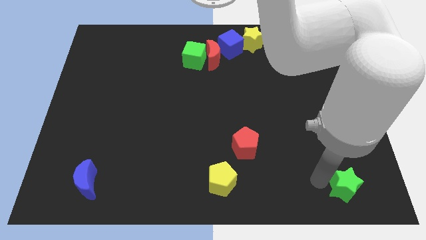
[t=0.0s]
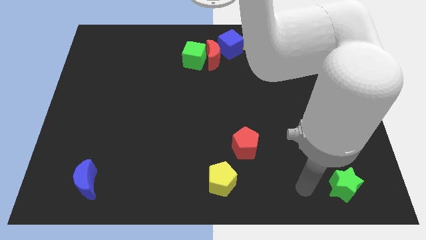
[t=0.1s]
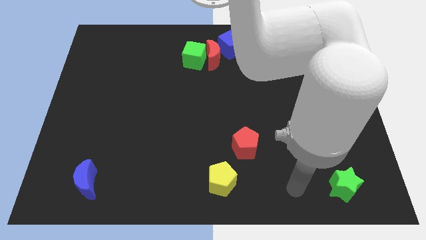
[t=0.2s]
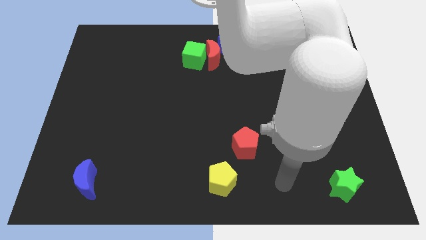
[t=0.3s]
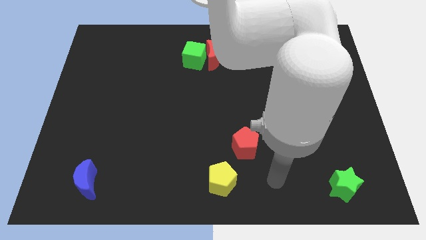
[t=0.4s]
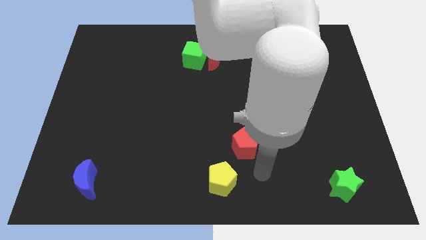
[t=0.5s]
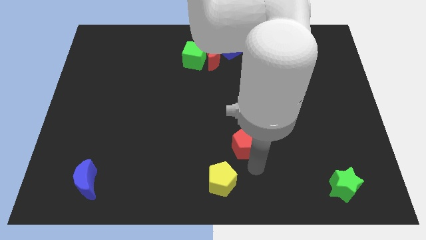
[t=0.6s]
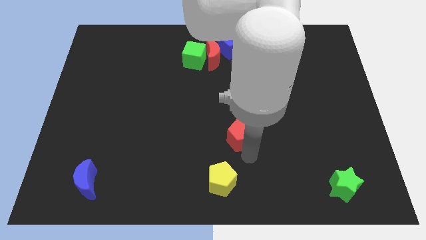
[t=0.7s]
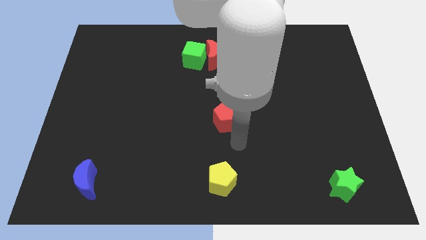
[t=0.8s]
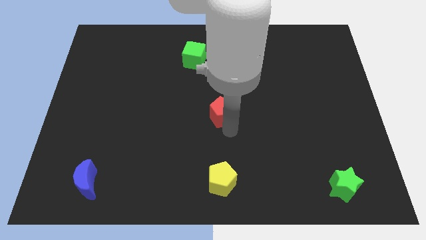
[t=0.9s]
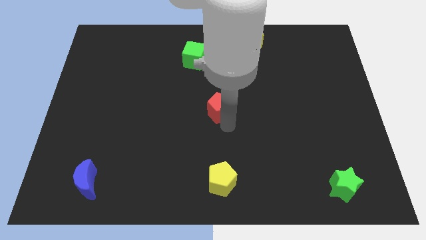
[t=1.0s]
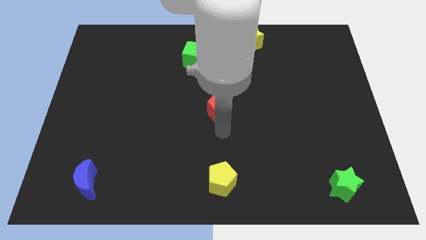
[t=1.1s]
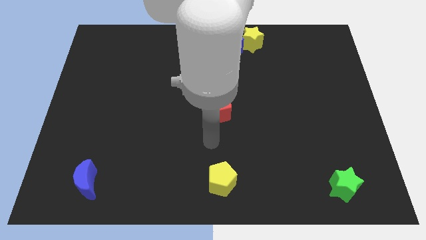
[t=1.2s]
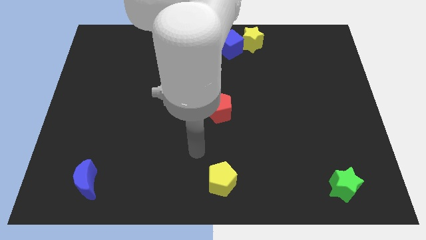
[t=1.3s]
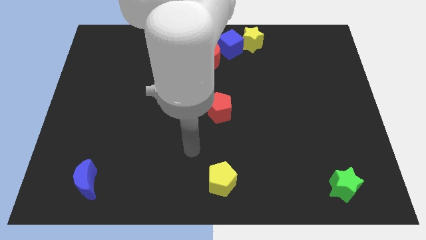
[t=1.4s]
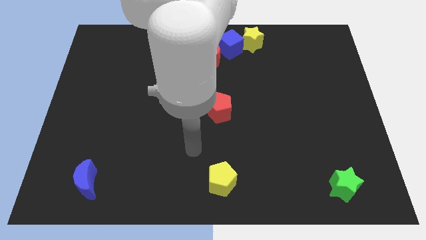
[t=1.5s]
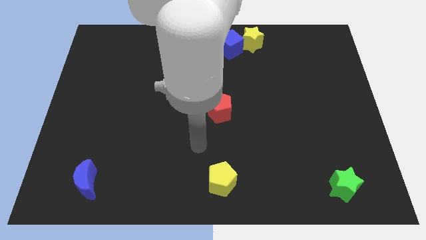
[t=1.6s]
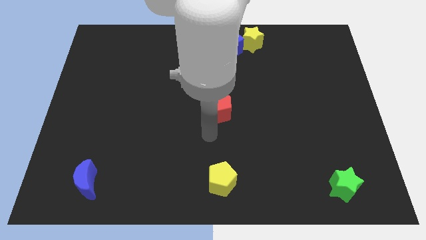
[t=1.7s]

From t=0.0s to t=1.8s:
move the red pentagon above the yellow pentagon

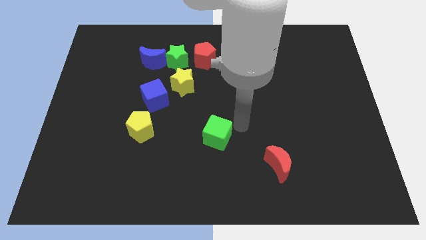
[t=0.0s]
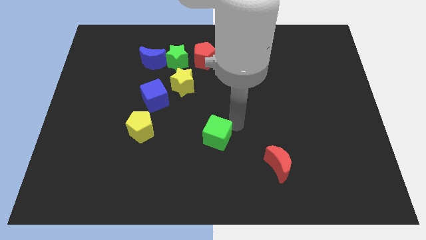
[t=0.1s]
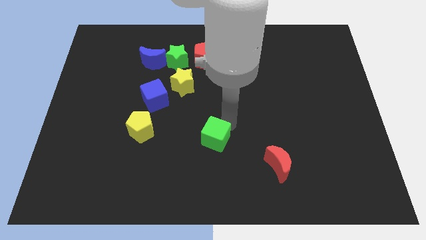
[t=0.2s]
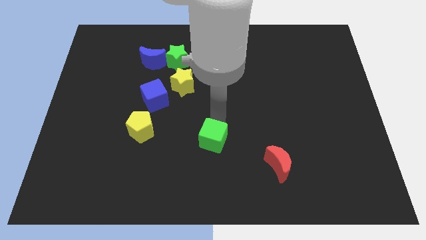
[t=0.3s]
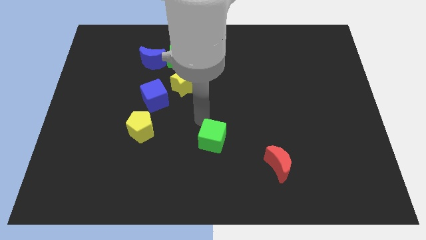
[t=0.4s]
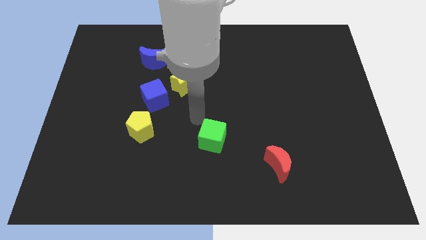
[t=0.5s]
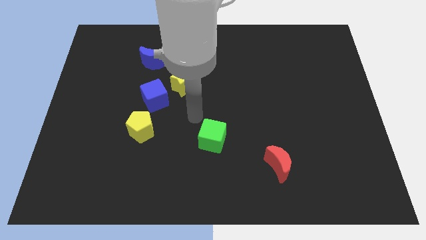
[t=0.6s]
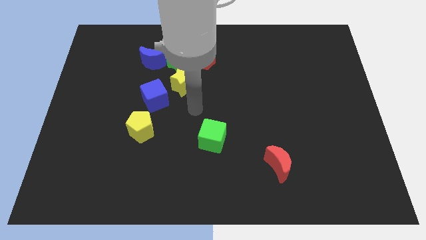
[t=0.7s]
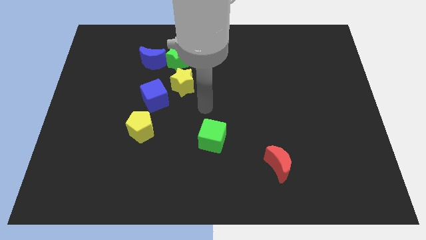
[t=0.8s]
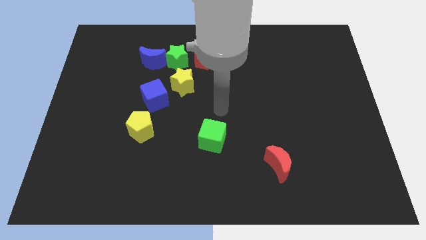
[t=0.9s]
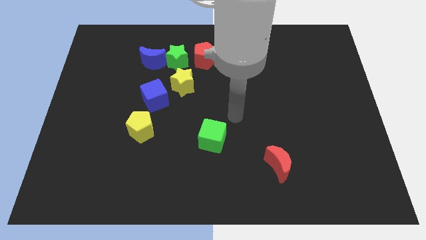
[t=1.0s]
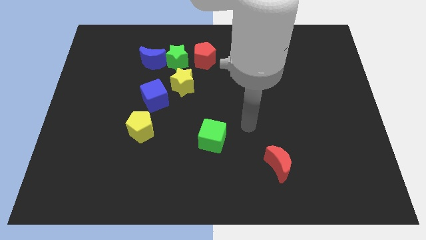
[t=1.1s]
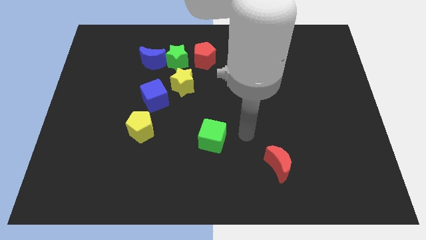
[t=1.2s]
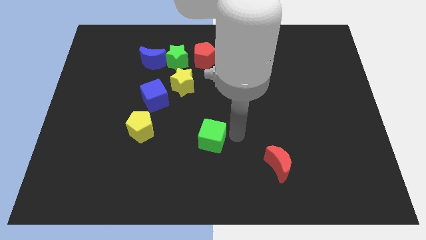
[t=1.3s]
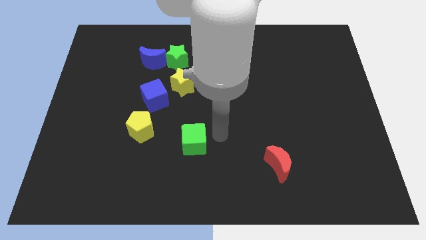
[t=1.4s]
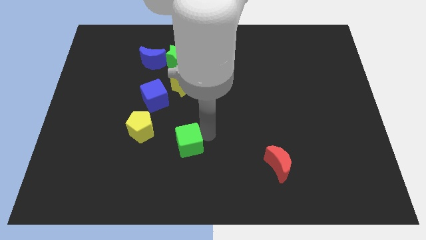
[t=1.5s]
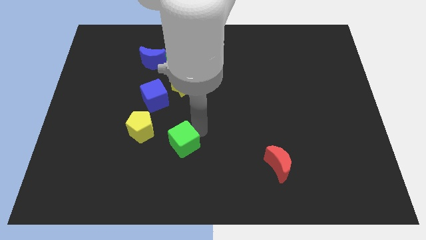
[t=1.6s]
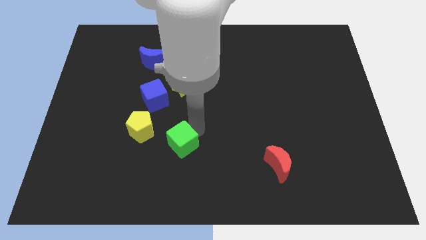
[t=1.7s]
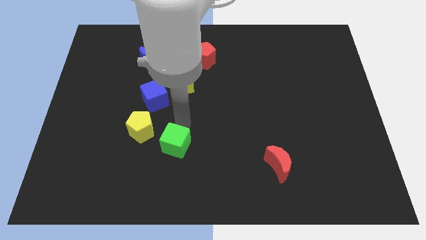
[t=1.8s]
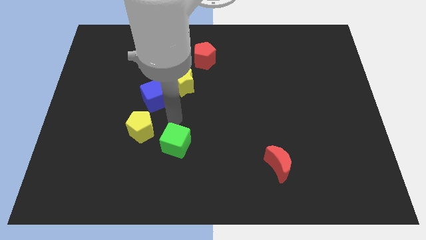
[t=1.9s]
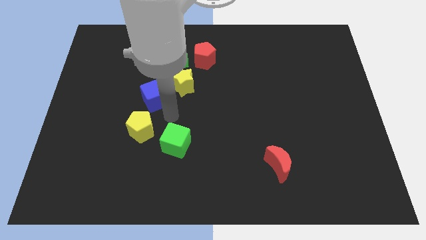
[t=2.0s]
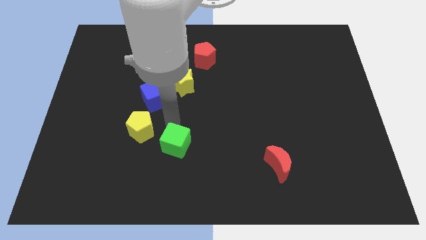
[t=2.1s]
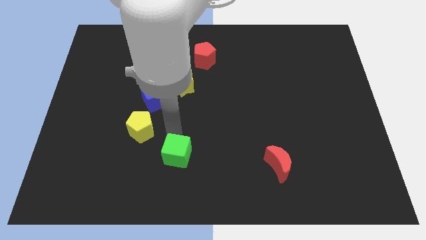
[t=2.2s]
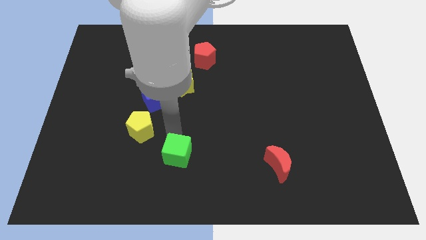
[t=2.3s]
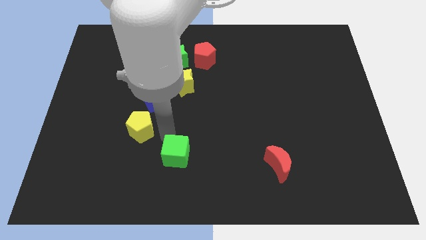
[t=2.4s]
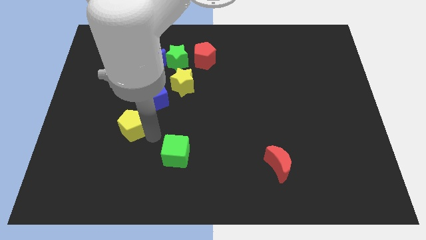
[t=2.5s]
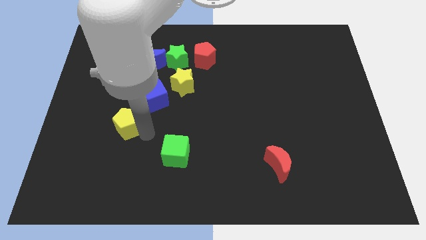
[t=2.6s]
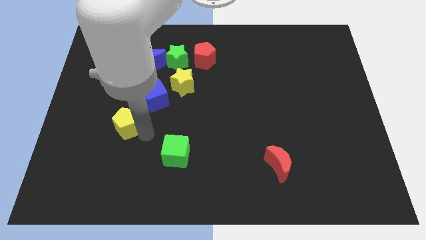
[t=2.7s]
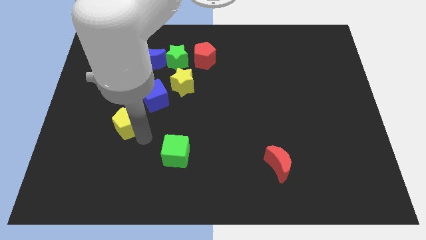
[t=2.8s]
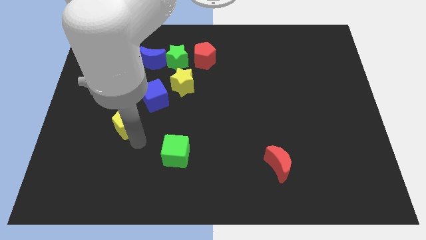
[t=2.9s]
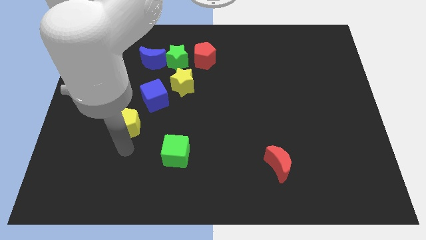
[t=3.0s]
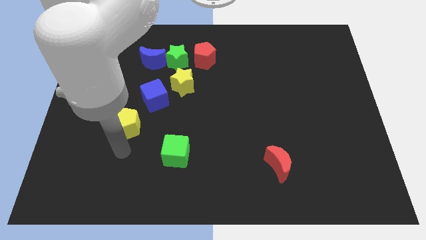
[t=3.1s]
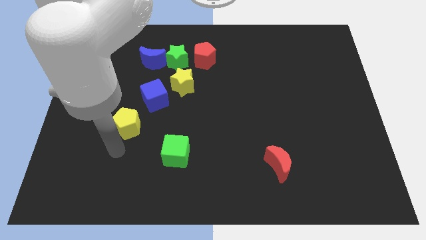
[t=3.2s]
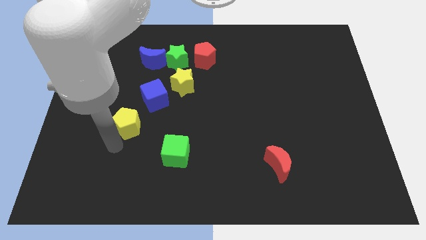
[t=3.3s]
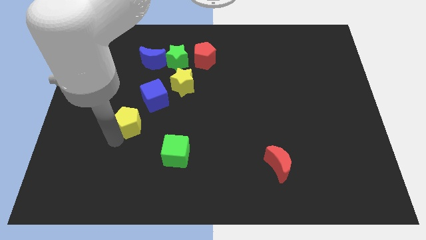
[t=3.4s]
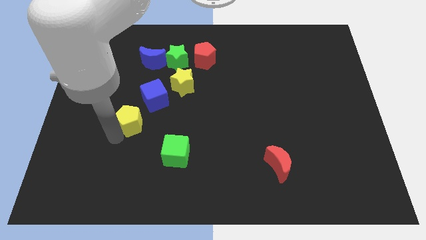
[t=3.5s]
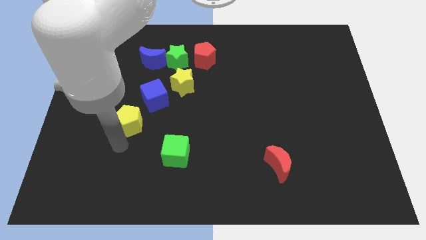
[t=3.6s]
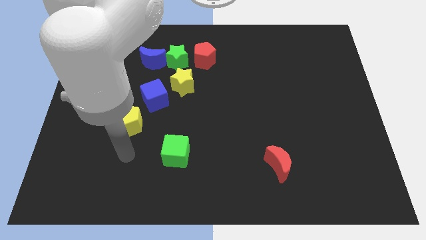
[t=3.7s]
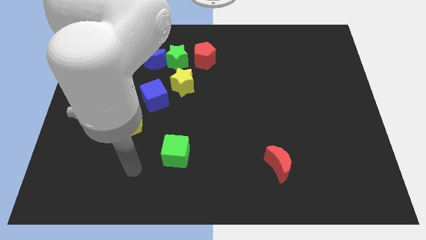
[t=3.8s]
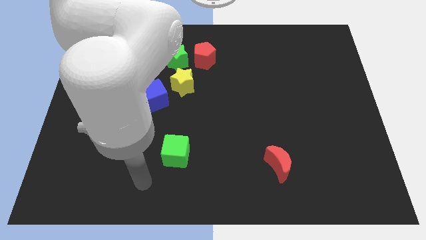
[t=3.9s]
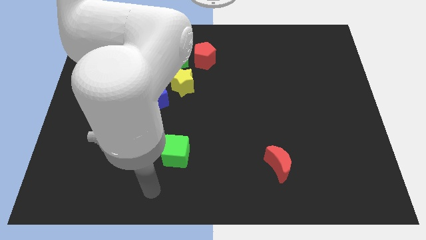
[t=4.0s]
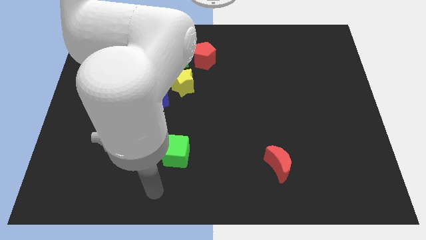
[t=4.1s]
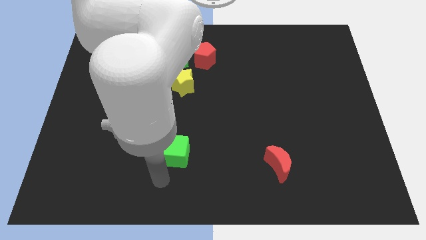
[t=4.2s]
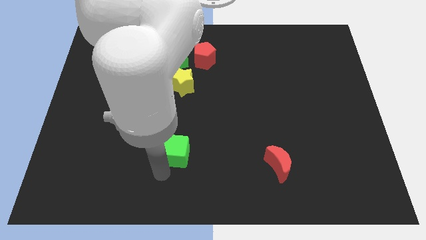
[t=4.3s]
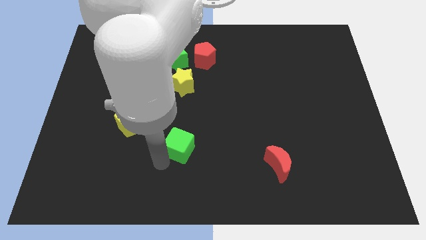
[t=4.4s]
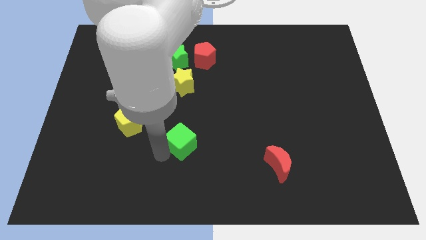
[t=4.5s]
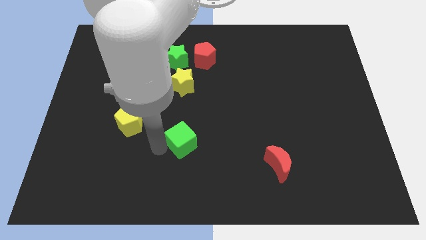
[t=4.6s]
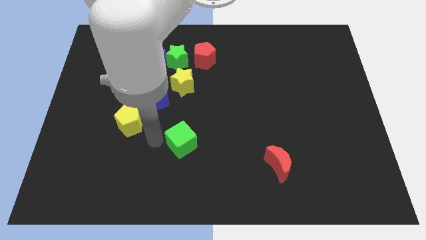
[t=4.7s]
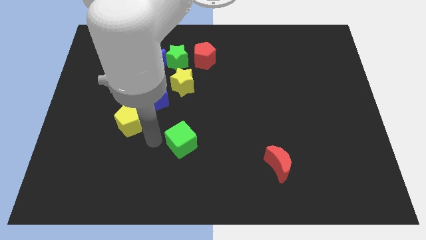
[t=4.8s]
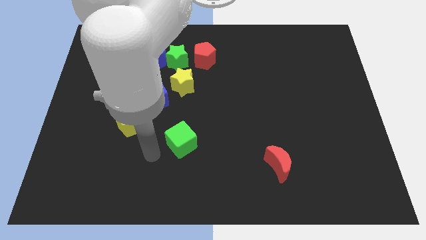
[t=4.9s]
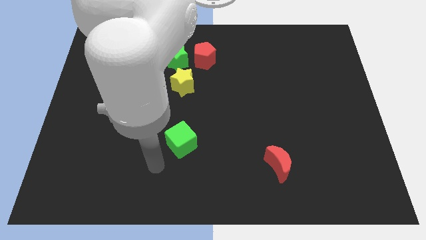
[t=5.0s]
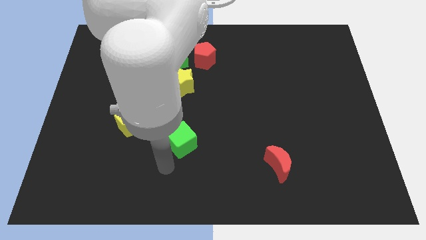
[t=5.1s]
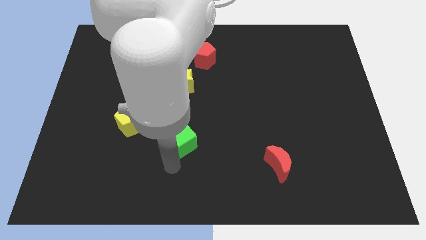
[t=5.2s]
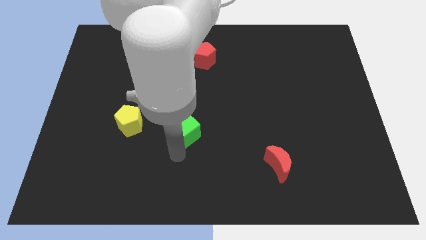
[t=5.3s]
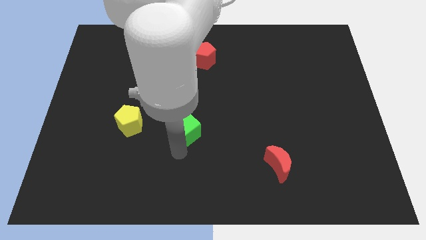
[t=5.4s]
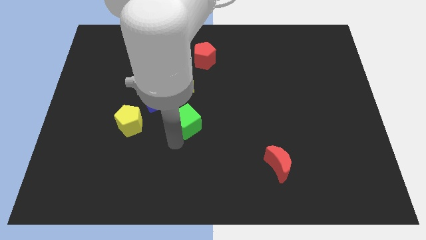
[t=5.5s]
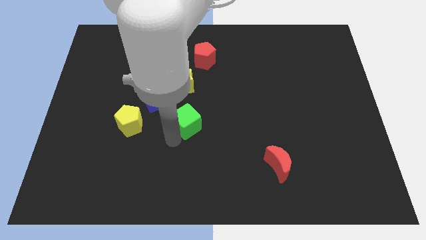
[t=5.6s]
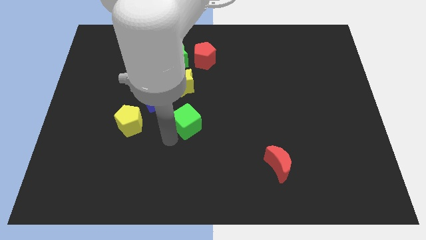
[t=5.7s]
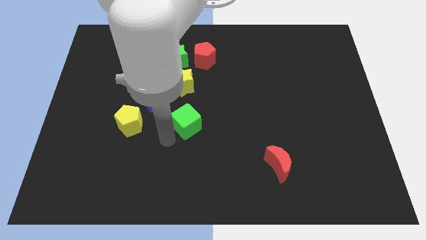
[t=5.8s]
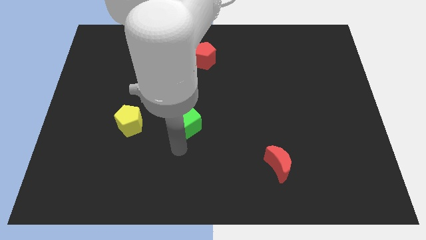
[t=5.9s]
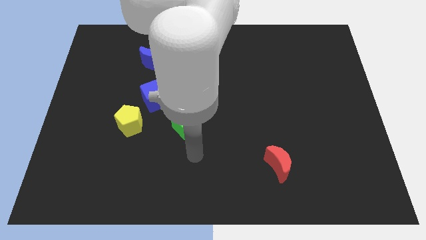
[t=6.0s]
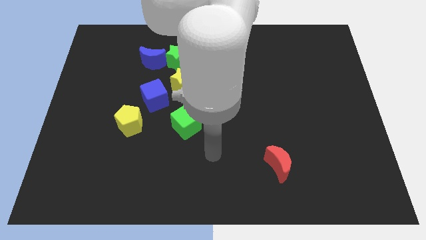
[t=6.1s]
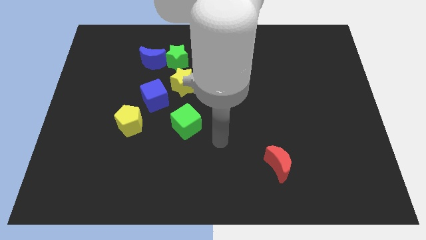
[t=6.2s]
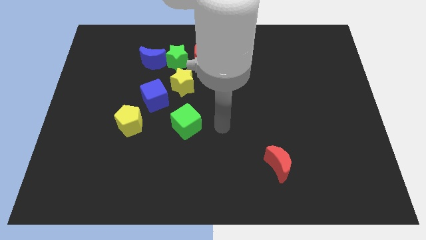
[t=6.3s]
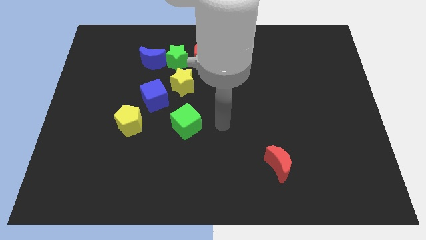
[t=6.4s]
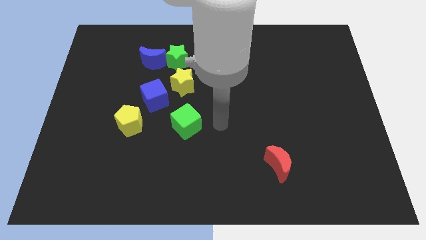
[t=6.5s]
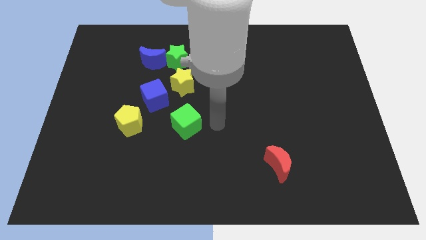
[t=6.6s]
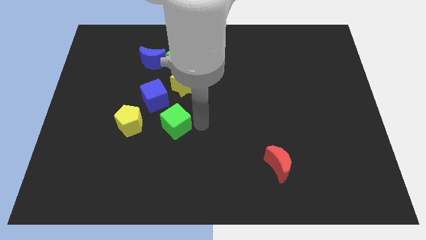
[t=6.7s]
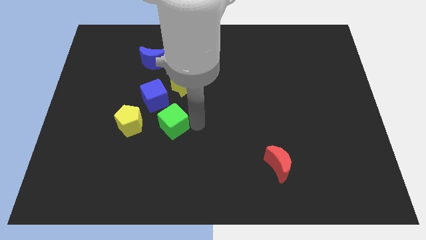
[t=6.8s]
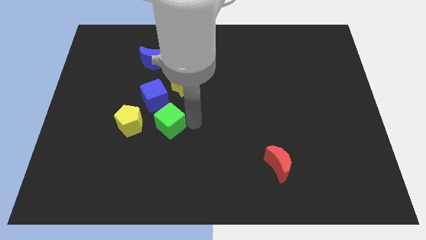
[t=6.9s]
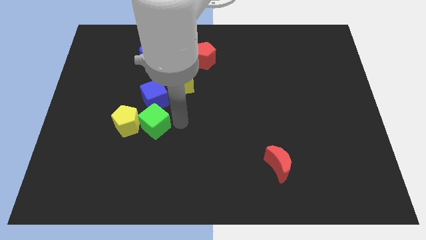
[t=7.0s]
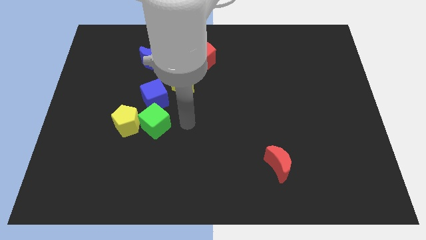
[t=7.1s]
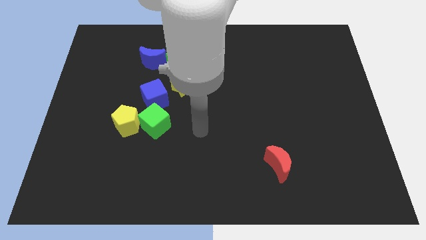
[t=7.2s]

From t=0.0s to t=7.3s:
put the green cube into the yellow pentagon
